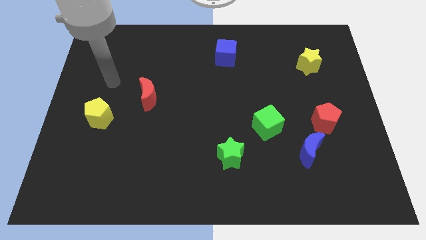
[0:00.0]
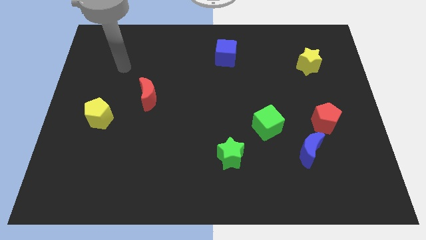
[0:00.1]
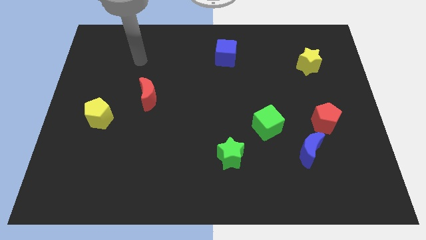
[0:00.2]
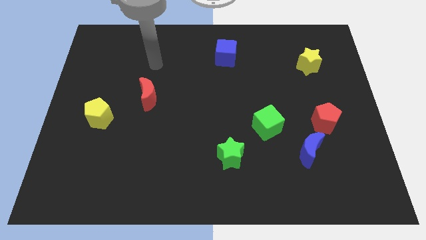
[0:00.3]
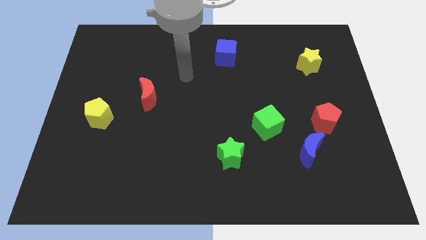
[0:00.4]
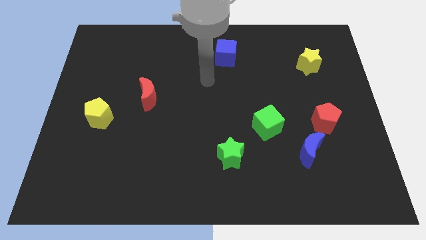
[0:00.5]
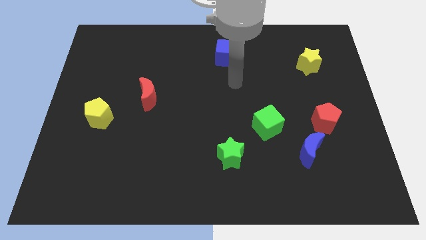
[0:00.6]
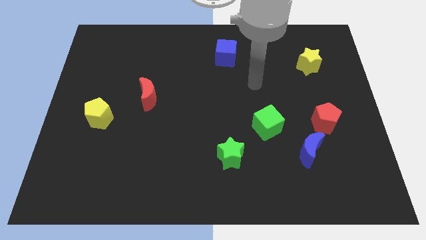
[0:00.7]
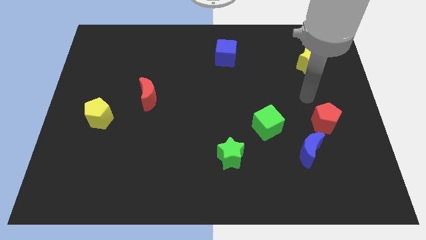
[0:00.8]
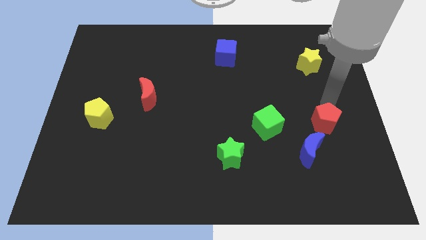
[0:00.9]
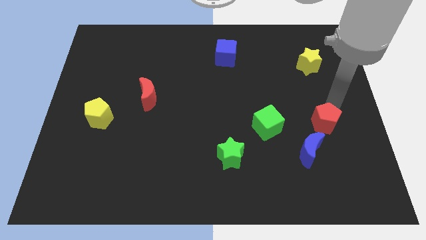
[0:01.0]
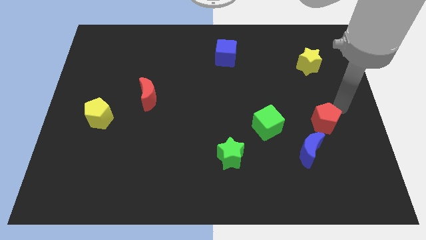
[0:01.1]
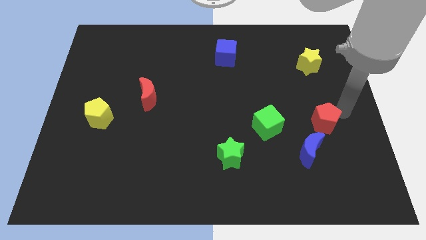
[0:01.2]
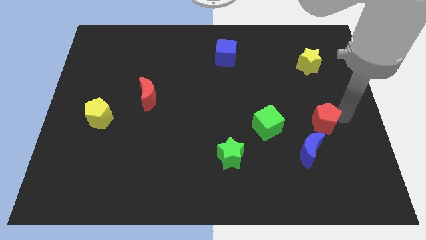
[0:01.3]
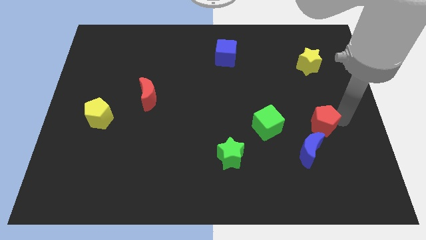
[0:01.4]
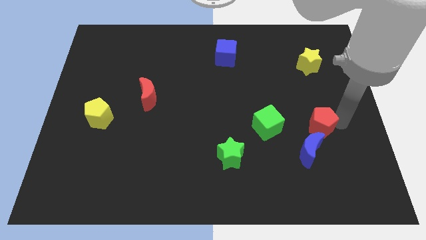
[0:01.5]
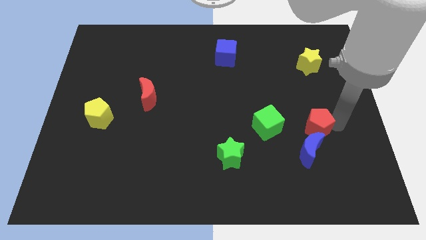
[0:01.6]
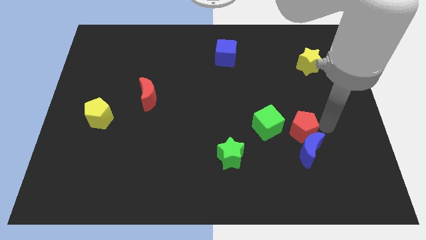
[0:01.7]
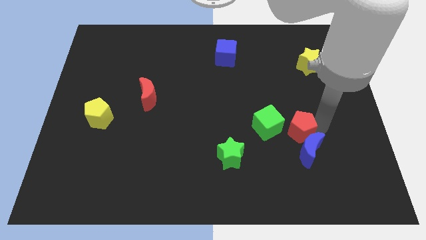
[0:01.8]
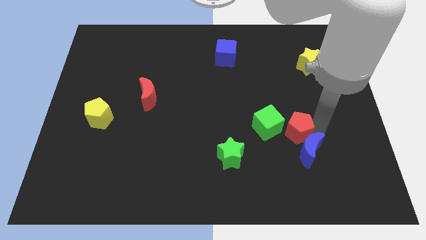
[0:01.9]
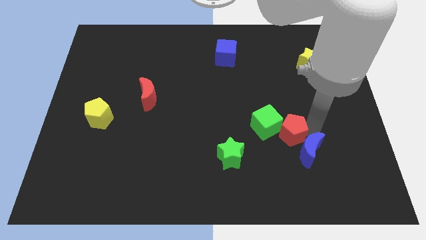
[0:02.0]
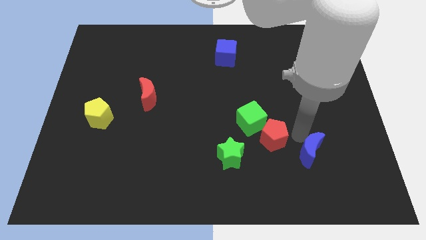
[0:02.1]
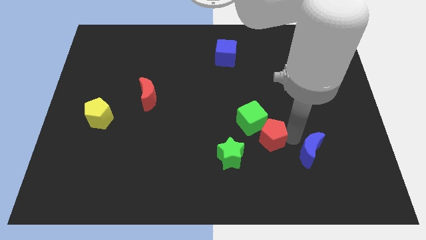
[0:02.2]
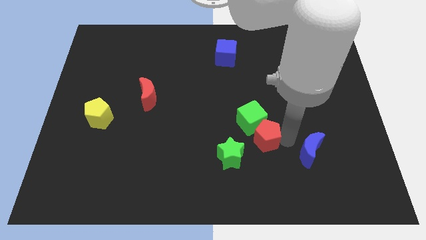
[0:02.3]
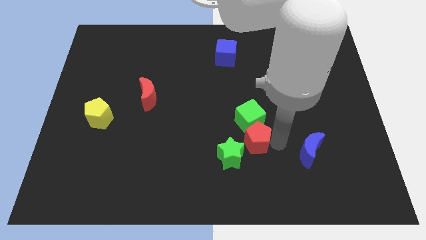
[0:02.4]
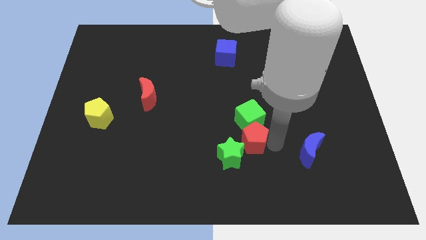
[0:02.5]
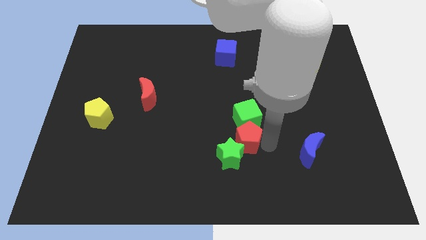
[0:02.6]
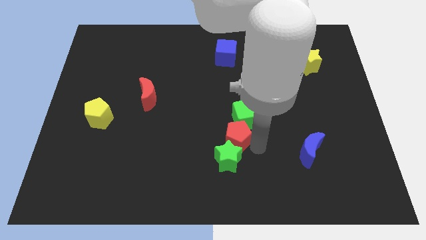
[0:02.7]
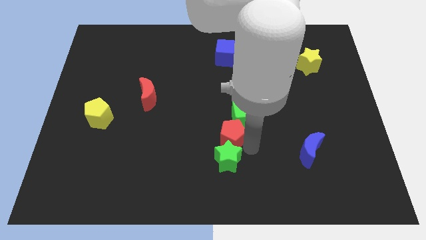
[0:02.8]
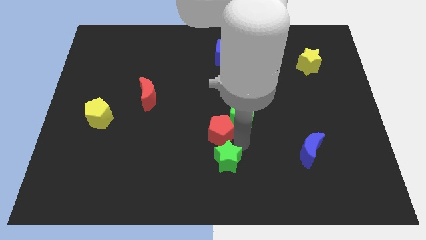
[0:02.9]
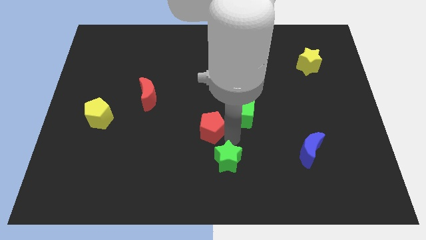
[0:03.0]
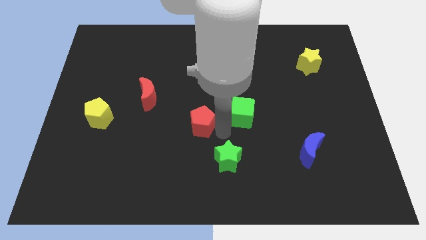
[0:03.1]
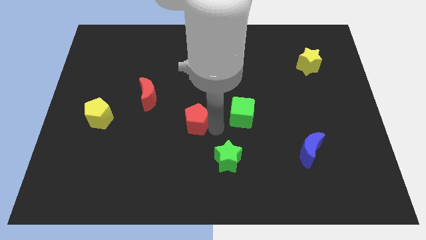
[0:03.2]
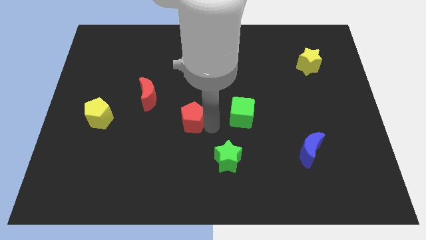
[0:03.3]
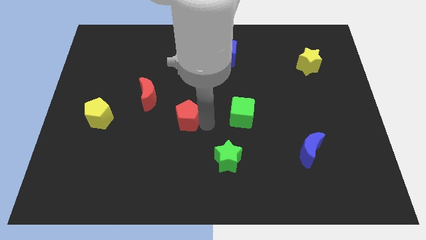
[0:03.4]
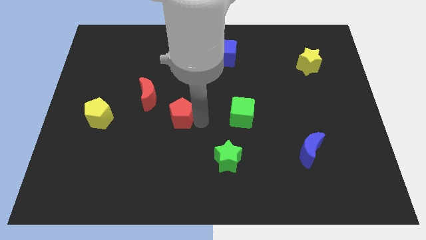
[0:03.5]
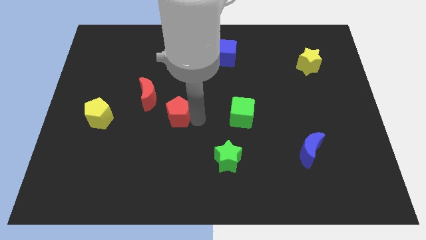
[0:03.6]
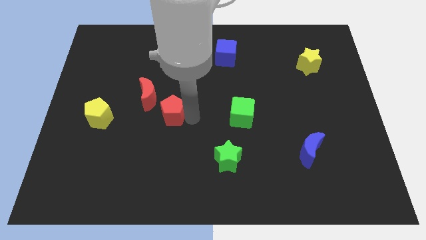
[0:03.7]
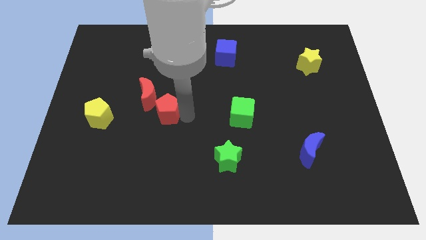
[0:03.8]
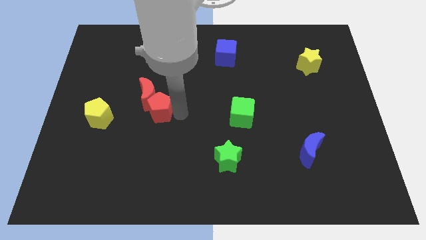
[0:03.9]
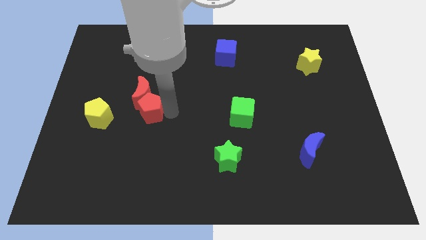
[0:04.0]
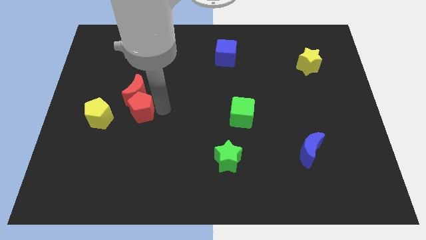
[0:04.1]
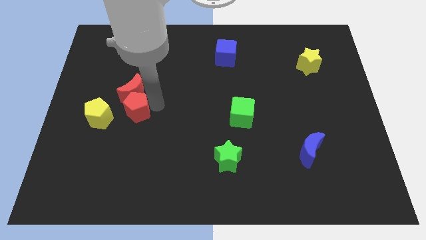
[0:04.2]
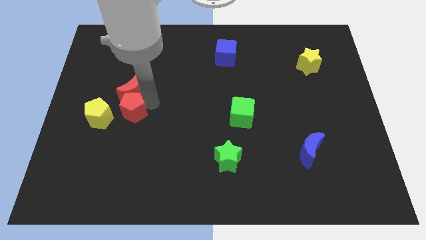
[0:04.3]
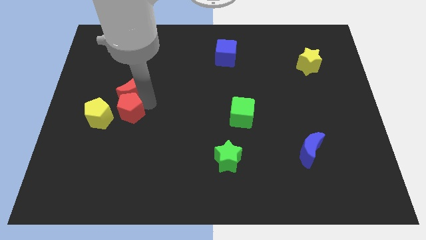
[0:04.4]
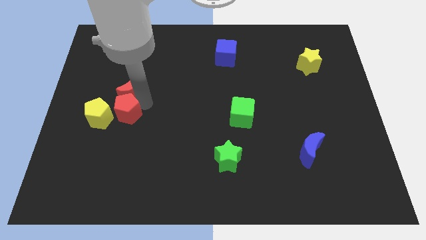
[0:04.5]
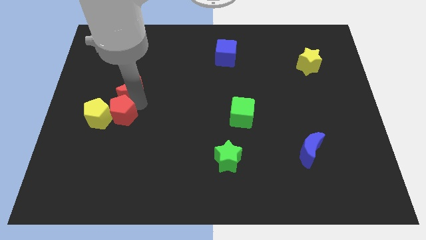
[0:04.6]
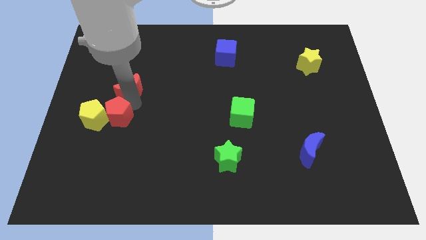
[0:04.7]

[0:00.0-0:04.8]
move the red pentagon to the yellow pentagon

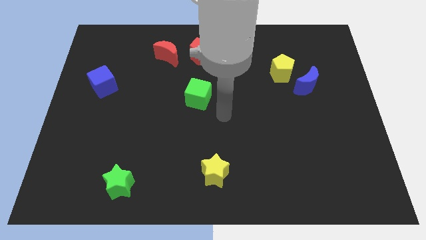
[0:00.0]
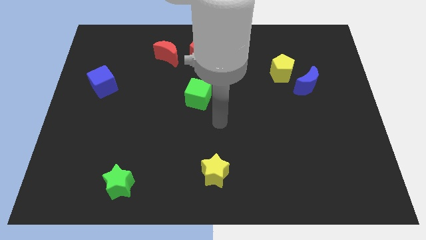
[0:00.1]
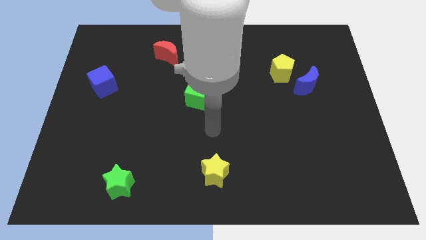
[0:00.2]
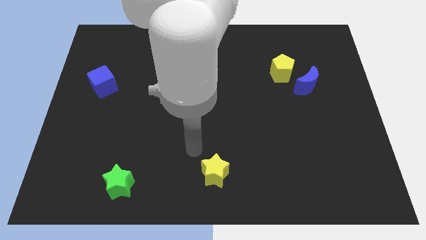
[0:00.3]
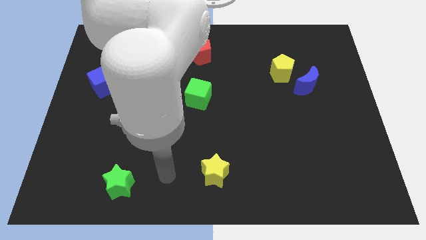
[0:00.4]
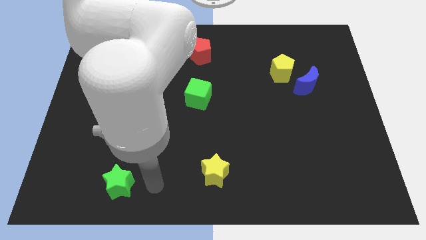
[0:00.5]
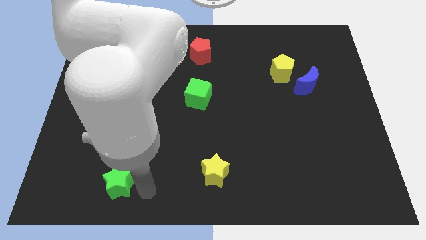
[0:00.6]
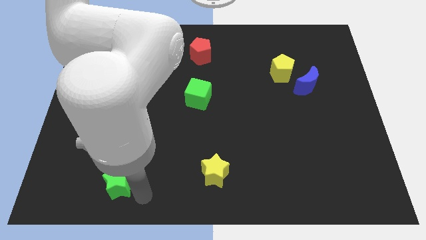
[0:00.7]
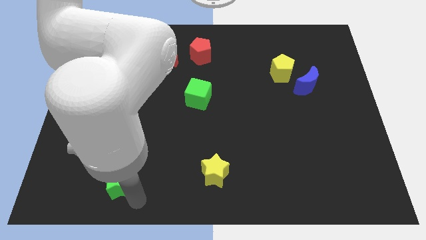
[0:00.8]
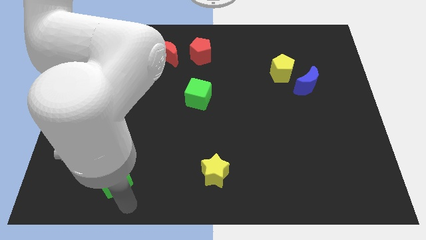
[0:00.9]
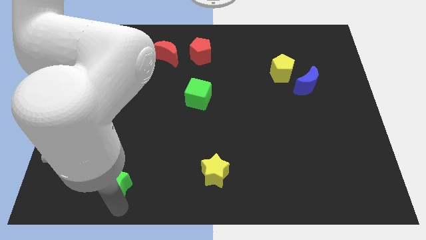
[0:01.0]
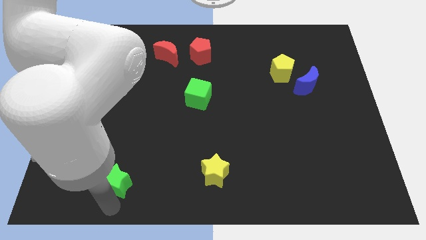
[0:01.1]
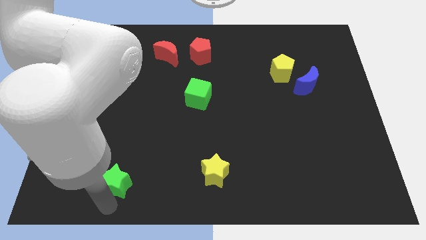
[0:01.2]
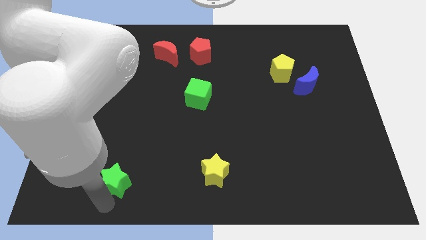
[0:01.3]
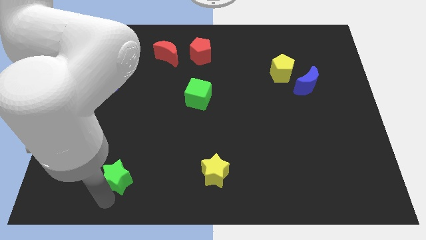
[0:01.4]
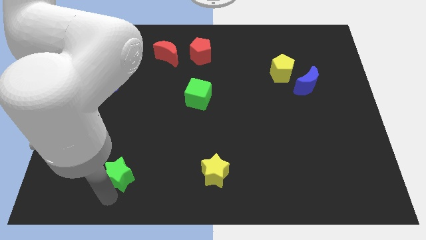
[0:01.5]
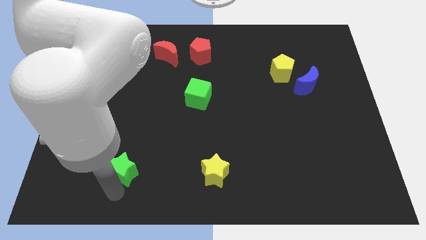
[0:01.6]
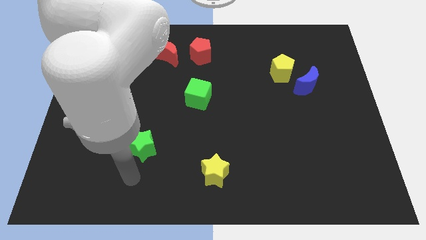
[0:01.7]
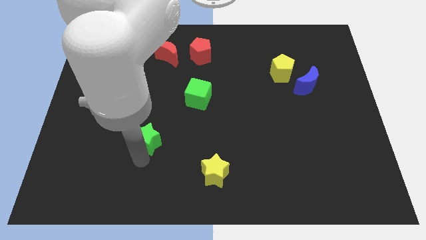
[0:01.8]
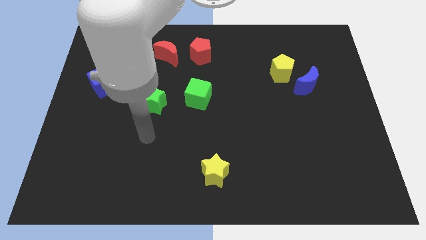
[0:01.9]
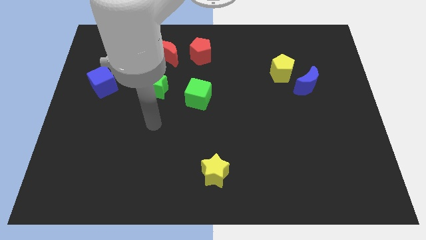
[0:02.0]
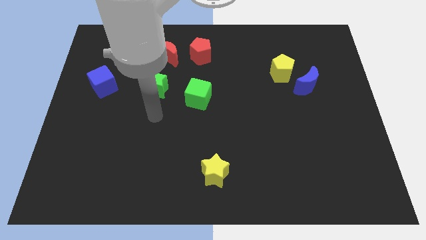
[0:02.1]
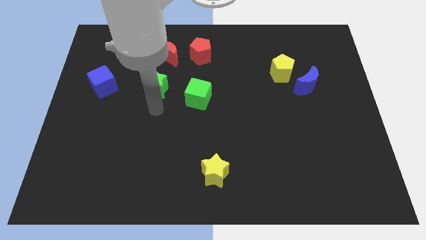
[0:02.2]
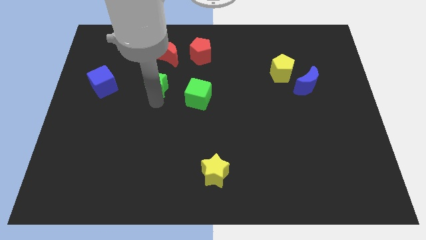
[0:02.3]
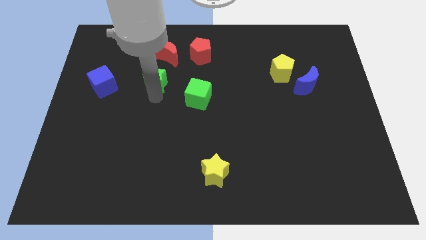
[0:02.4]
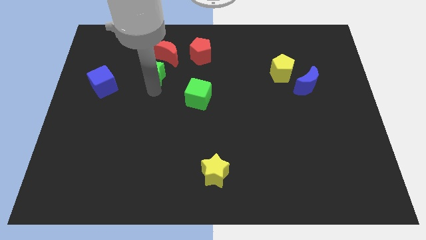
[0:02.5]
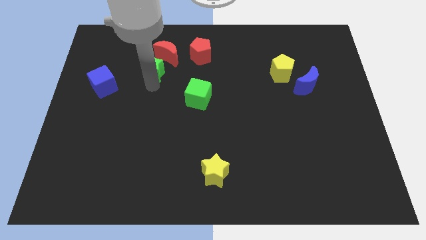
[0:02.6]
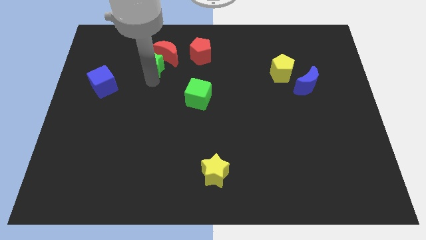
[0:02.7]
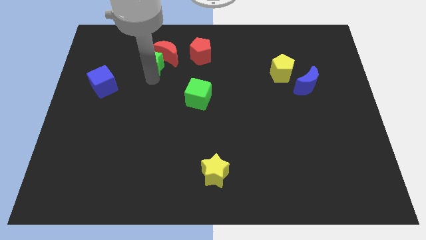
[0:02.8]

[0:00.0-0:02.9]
push the green star to the red moon

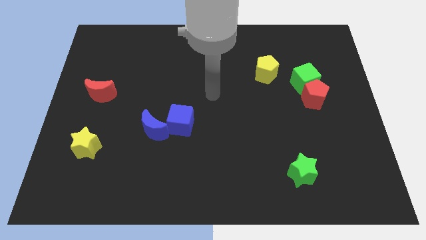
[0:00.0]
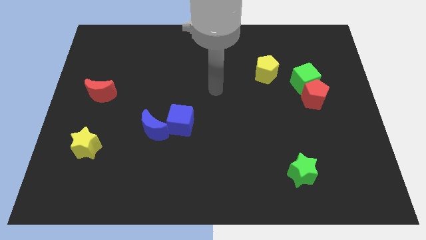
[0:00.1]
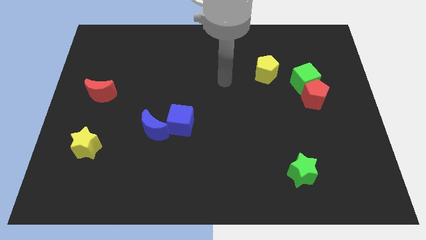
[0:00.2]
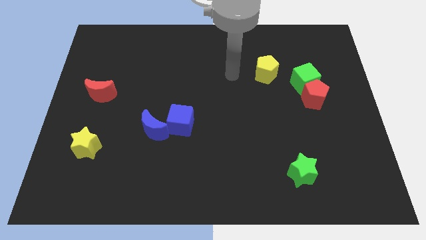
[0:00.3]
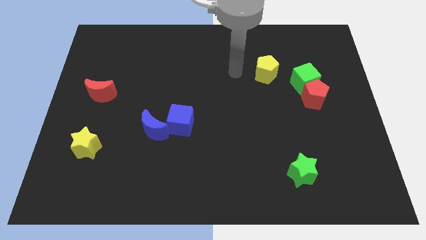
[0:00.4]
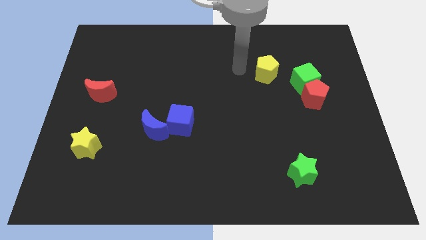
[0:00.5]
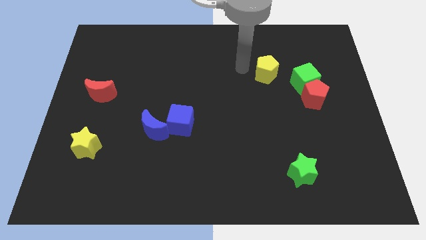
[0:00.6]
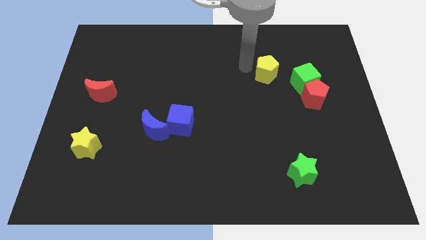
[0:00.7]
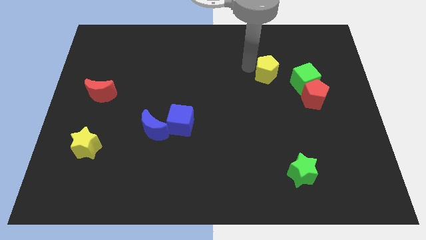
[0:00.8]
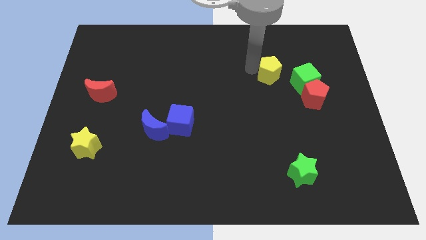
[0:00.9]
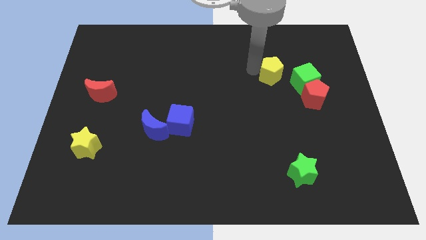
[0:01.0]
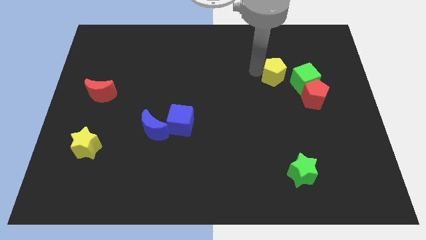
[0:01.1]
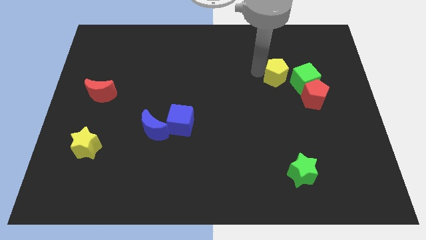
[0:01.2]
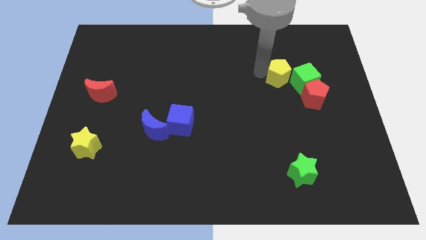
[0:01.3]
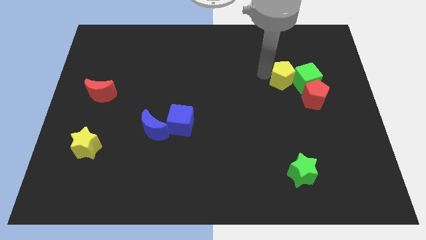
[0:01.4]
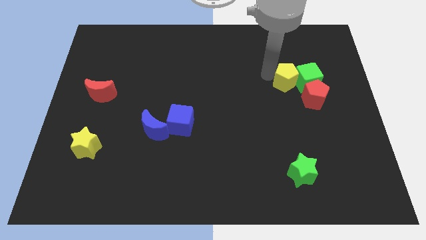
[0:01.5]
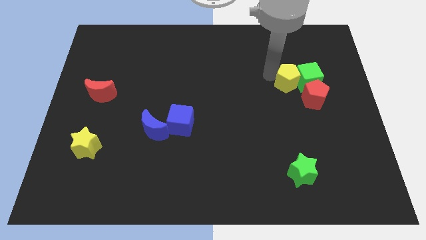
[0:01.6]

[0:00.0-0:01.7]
move the yellow pentagon close to the green cube
